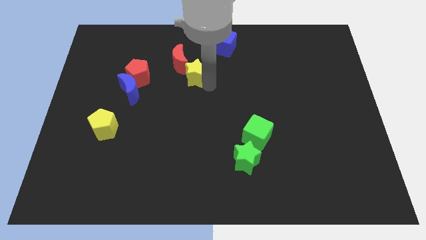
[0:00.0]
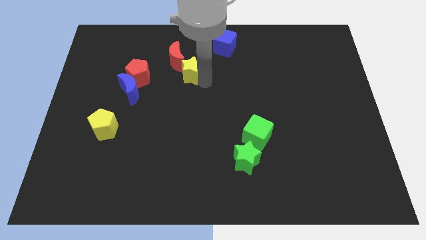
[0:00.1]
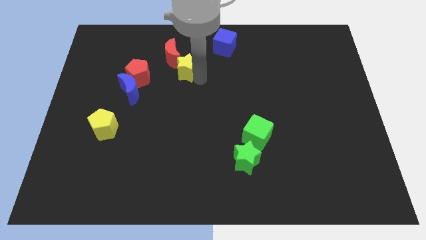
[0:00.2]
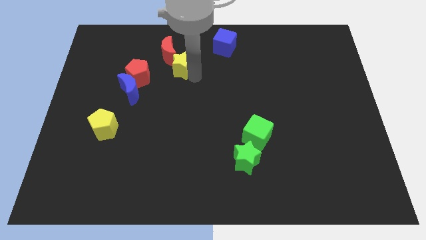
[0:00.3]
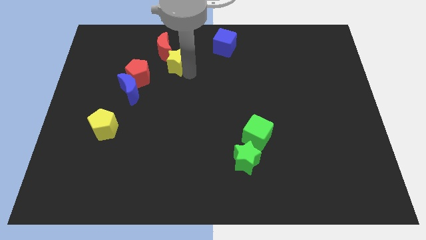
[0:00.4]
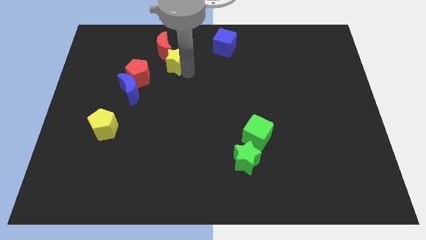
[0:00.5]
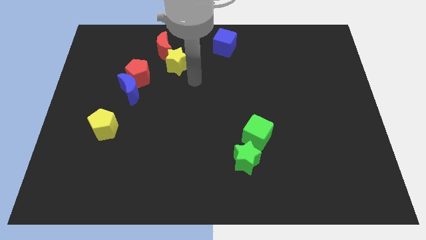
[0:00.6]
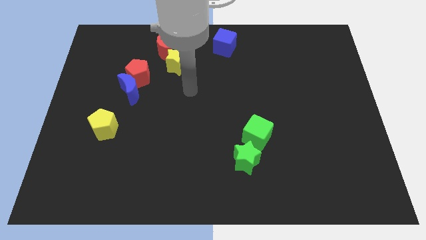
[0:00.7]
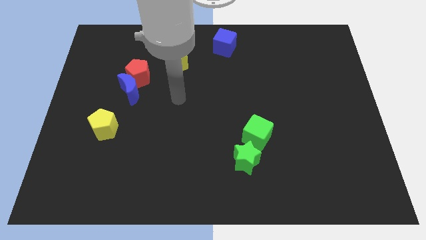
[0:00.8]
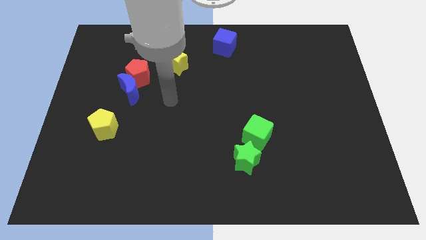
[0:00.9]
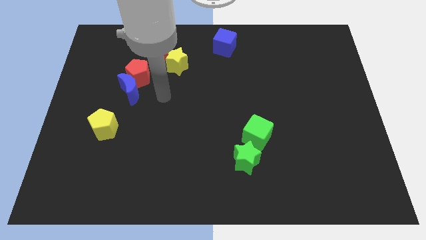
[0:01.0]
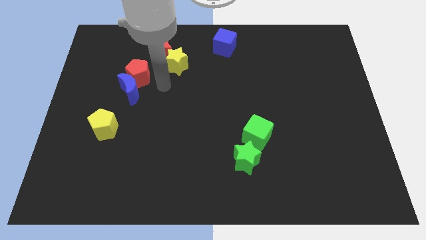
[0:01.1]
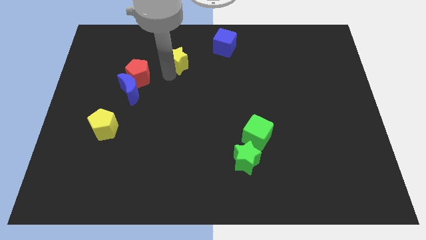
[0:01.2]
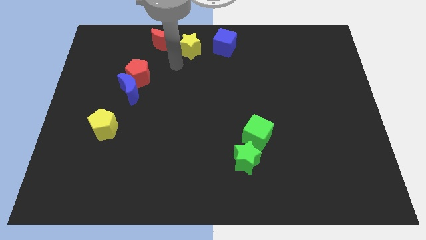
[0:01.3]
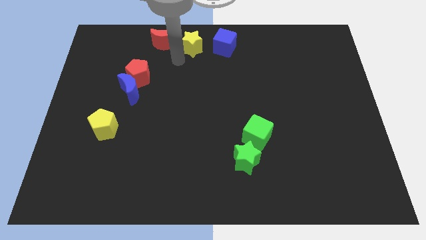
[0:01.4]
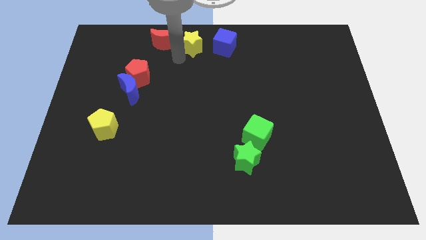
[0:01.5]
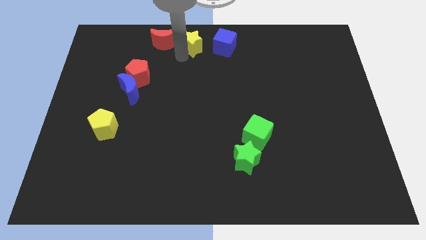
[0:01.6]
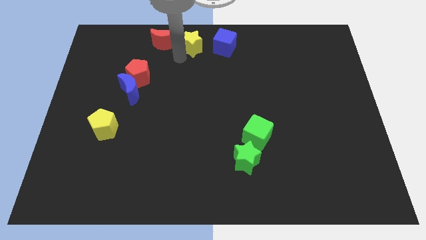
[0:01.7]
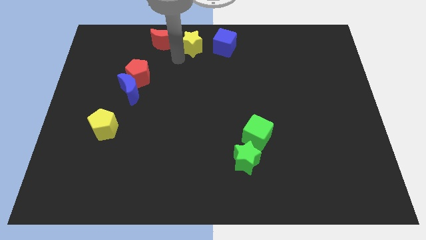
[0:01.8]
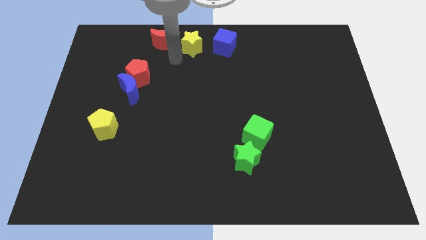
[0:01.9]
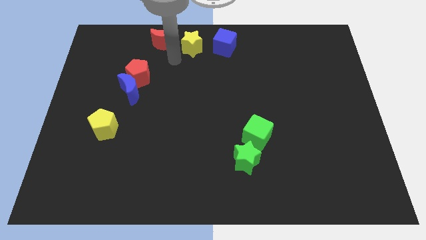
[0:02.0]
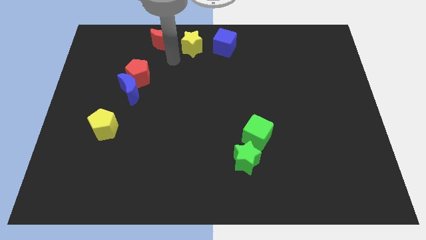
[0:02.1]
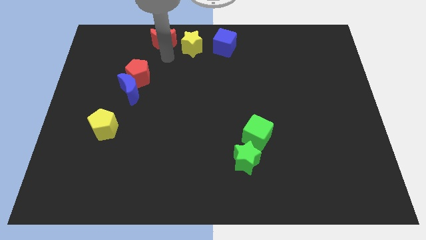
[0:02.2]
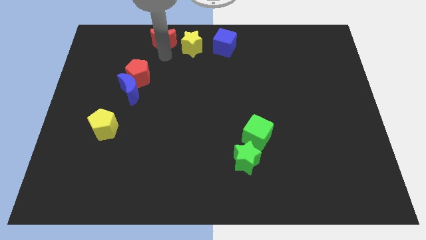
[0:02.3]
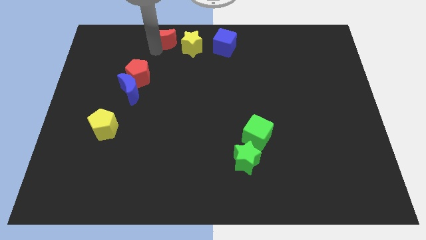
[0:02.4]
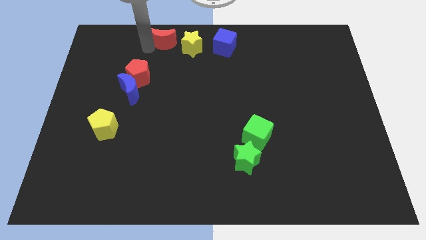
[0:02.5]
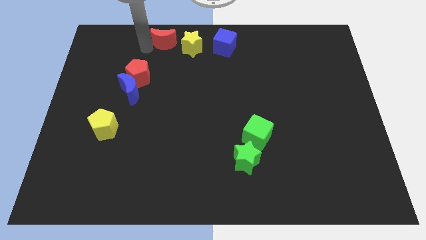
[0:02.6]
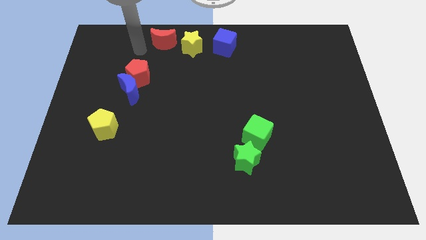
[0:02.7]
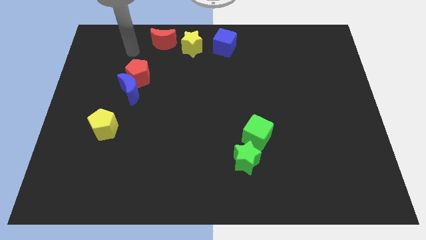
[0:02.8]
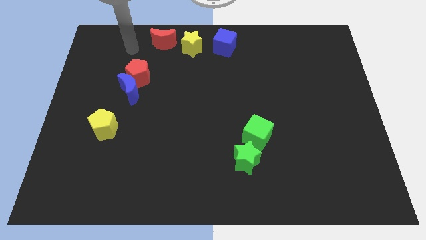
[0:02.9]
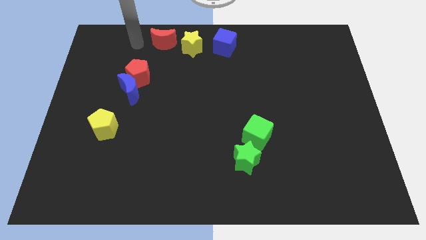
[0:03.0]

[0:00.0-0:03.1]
move the yellow star and red crescent to the top center

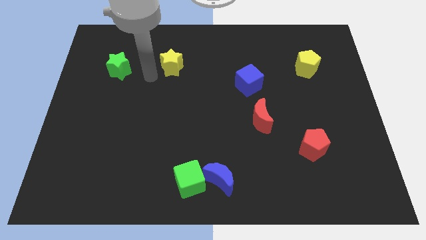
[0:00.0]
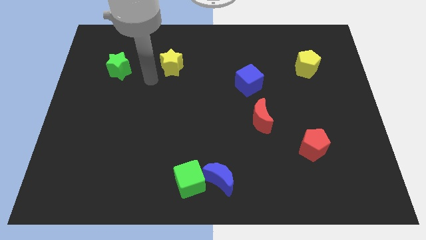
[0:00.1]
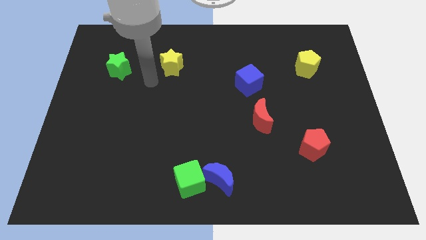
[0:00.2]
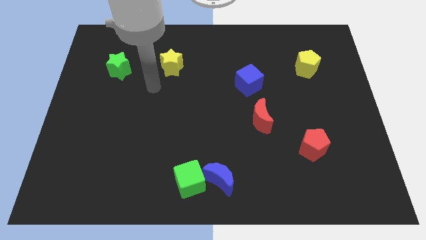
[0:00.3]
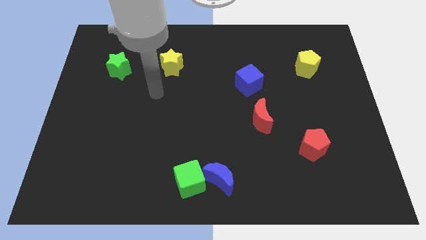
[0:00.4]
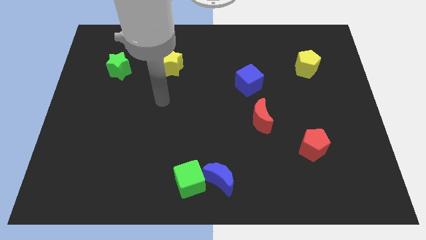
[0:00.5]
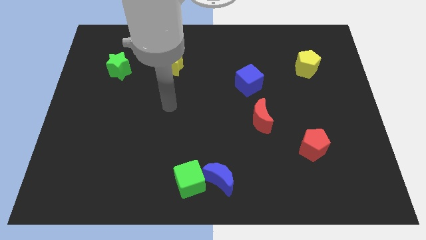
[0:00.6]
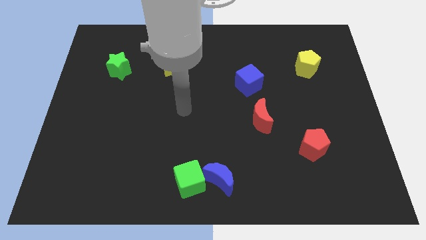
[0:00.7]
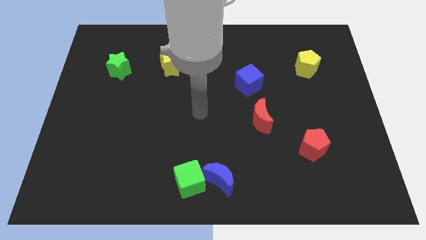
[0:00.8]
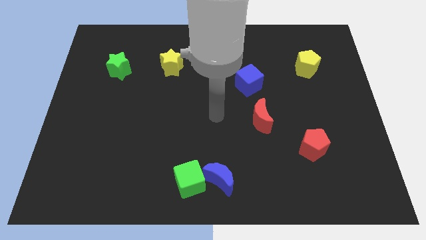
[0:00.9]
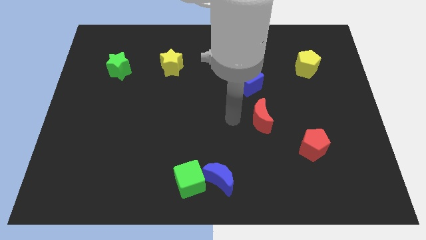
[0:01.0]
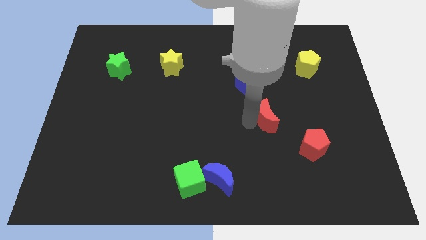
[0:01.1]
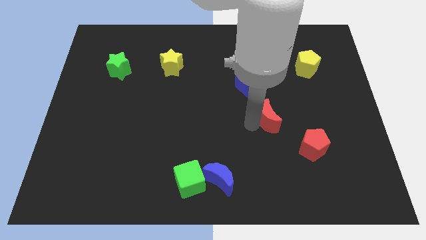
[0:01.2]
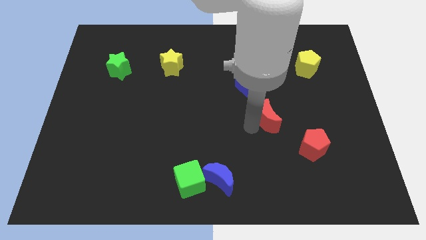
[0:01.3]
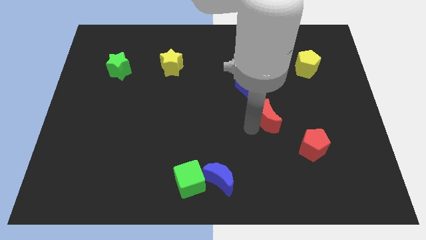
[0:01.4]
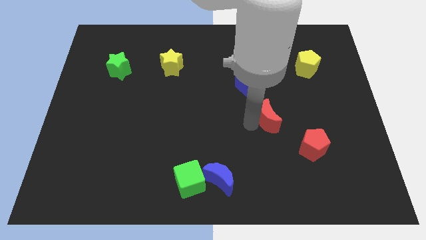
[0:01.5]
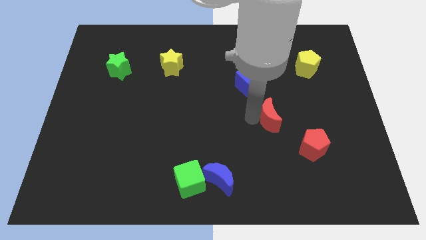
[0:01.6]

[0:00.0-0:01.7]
push the red moon slightly to the right

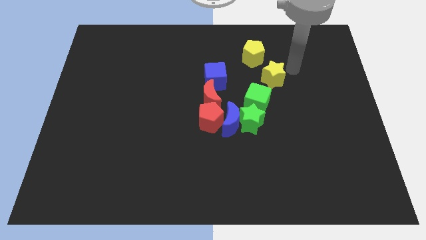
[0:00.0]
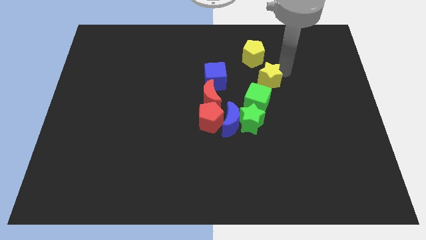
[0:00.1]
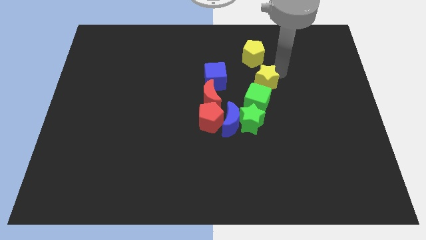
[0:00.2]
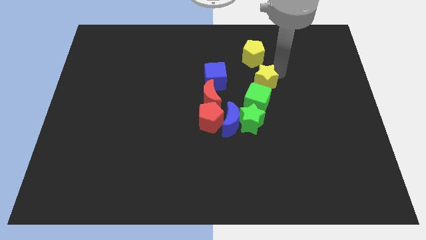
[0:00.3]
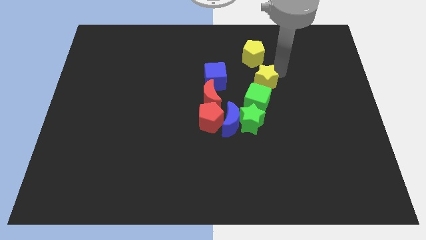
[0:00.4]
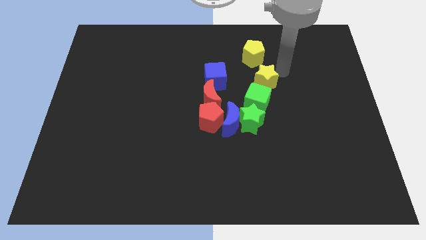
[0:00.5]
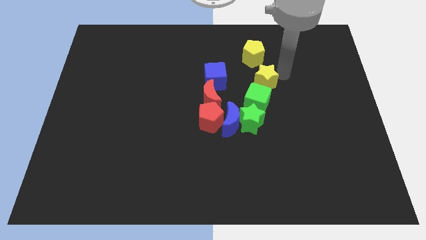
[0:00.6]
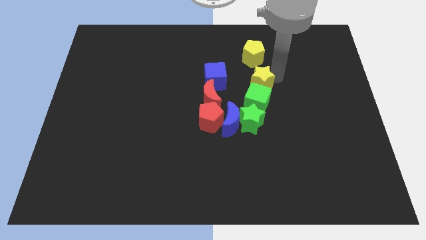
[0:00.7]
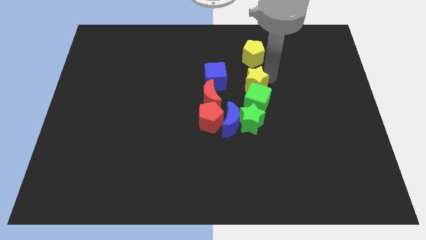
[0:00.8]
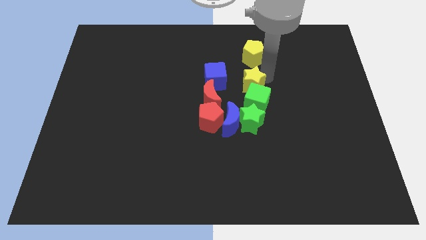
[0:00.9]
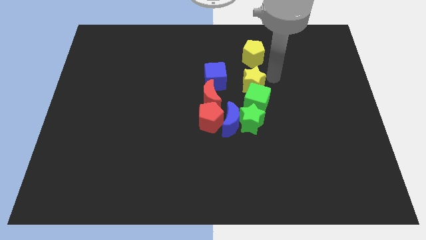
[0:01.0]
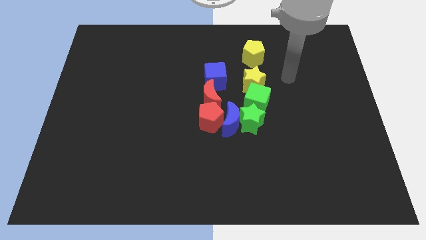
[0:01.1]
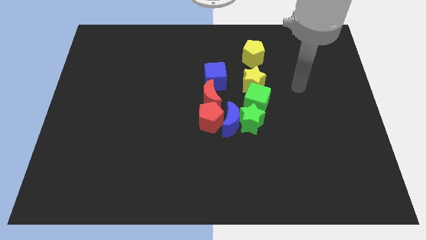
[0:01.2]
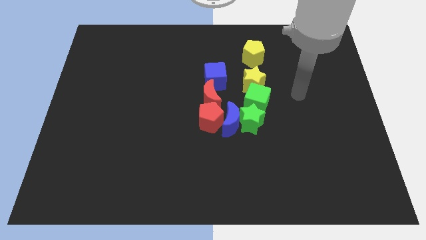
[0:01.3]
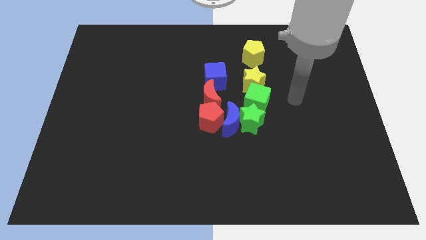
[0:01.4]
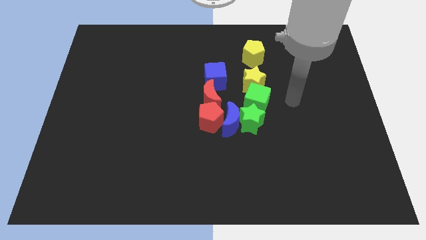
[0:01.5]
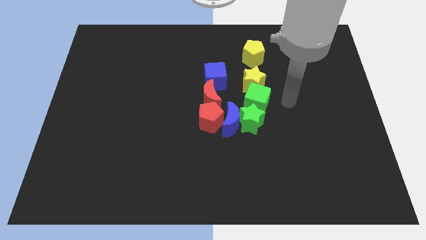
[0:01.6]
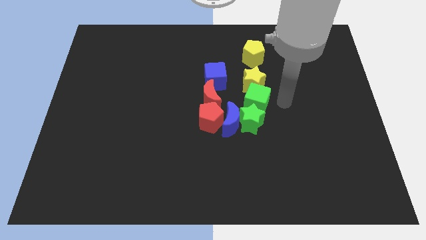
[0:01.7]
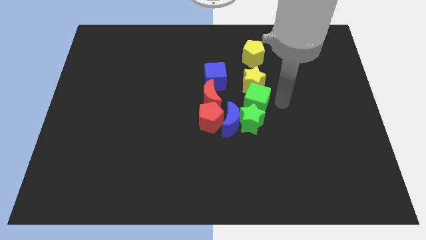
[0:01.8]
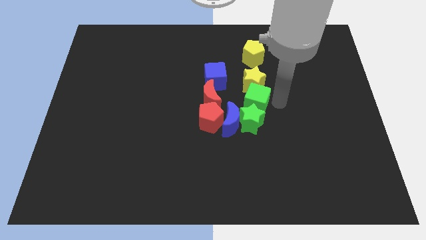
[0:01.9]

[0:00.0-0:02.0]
move the yellow star in between the yellow pentagon and green cube

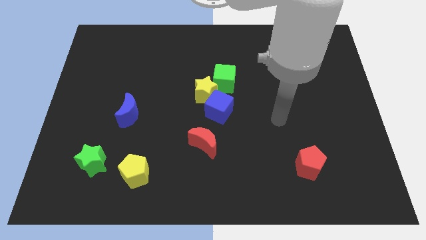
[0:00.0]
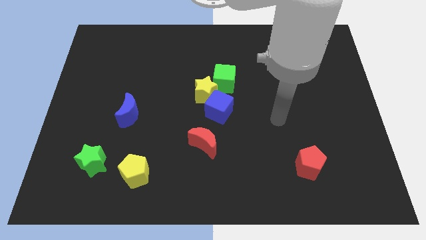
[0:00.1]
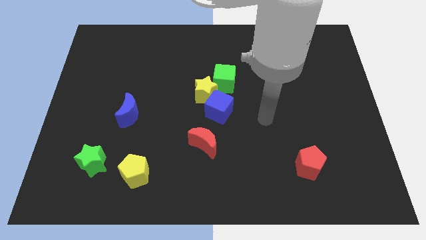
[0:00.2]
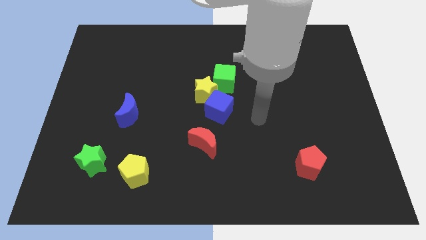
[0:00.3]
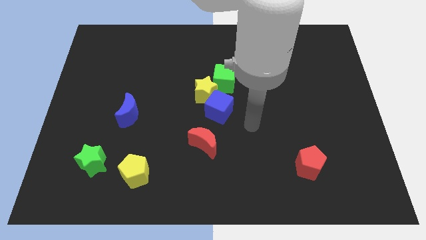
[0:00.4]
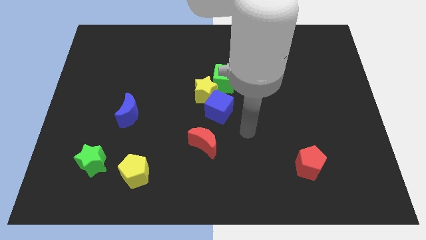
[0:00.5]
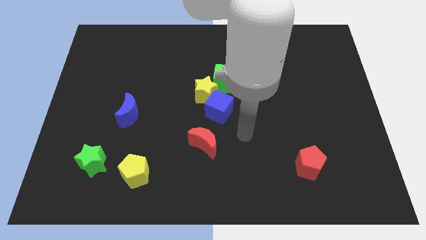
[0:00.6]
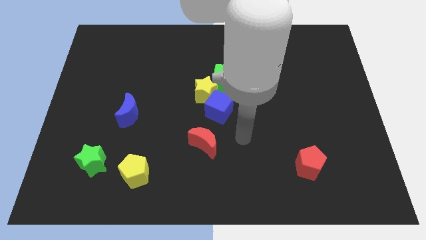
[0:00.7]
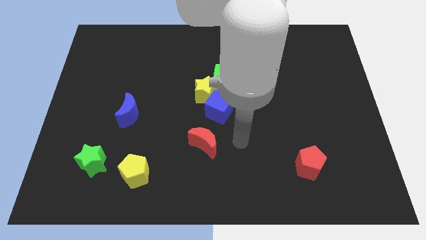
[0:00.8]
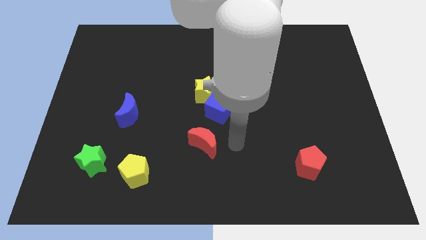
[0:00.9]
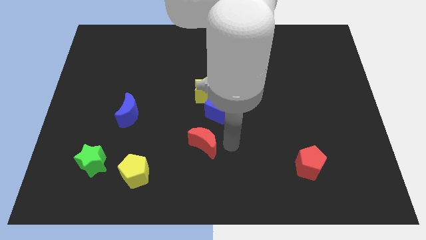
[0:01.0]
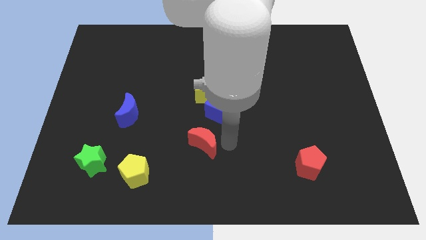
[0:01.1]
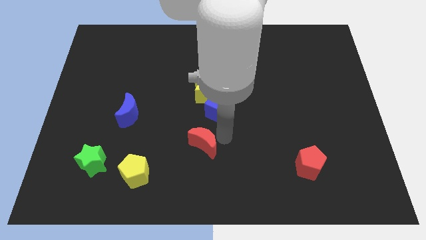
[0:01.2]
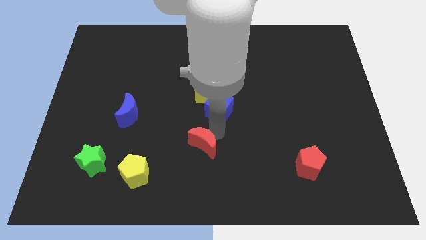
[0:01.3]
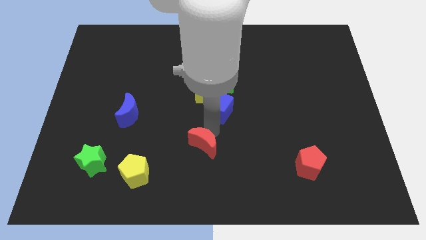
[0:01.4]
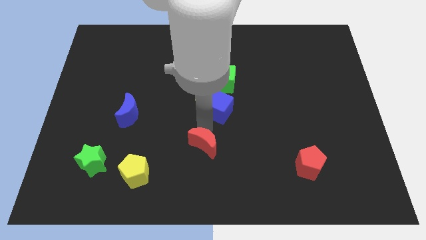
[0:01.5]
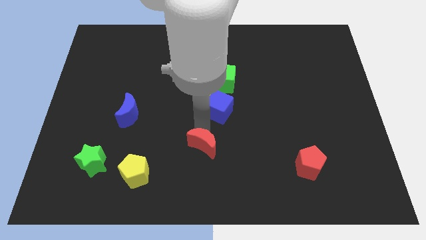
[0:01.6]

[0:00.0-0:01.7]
touch the red crescent with your arm

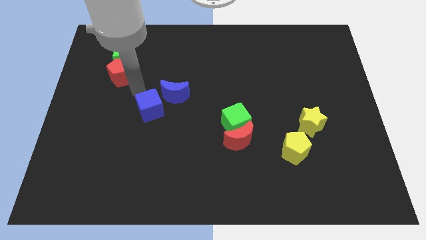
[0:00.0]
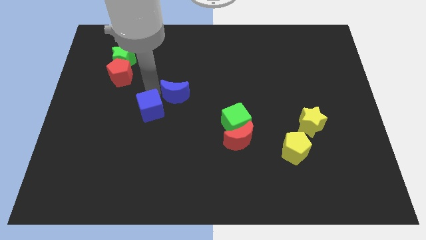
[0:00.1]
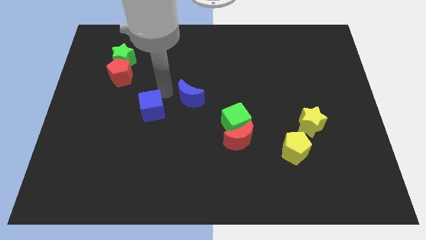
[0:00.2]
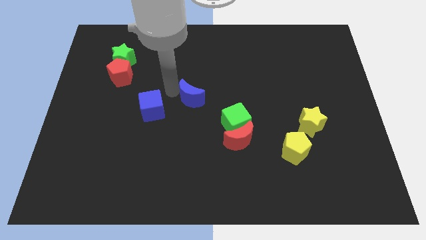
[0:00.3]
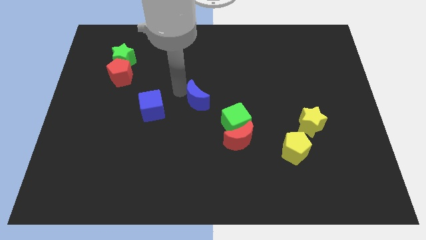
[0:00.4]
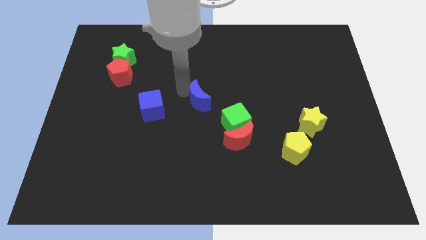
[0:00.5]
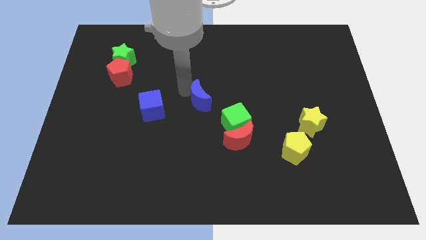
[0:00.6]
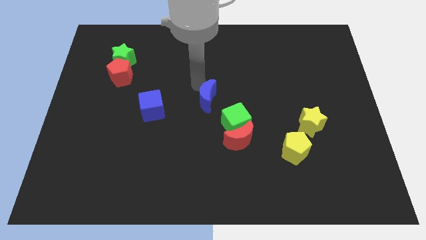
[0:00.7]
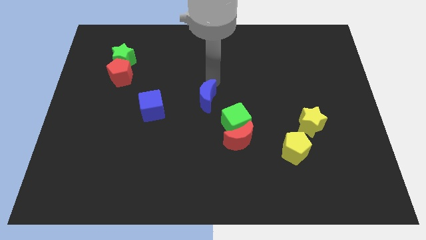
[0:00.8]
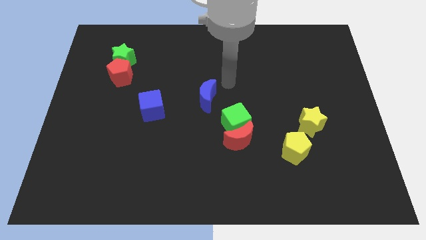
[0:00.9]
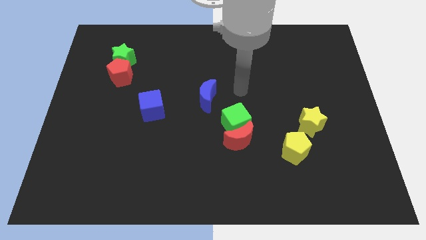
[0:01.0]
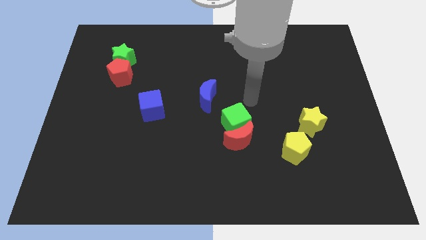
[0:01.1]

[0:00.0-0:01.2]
move the blue crescent to the center of the board
